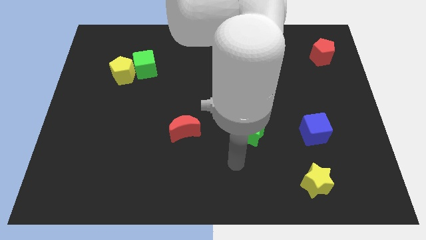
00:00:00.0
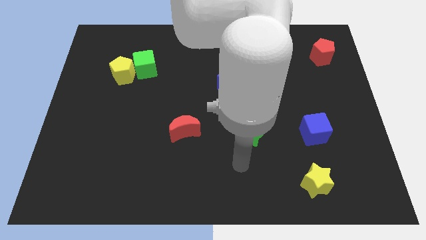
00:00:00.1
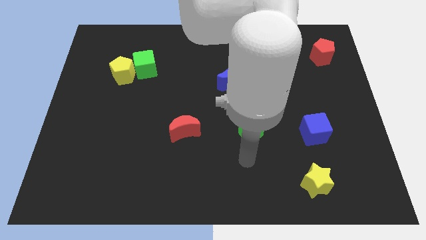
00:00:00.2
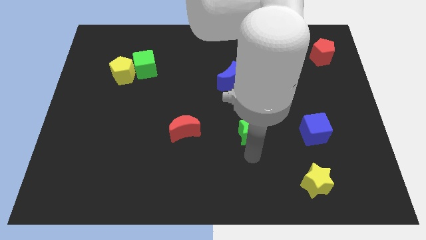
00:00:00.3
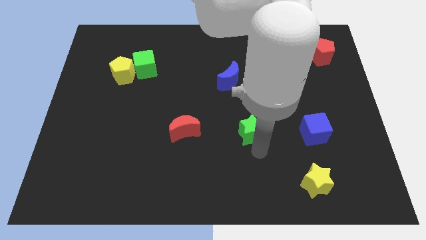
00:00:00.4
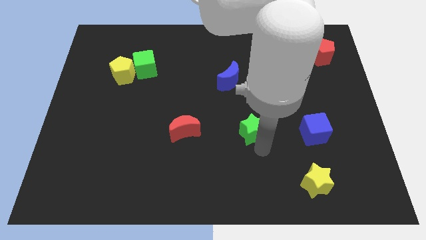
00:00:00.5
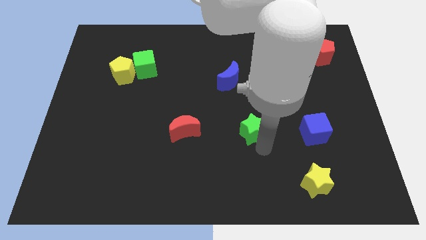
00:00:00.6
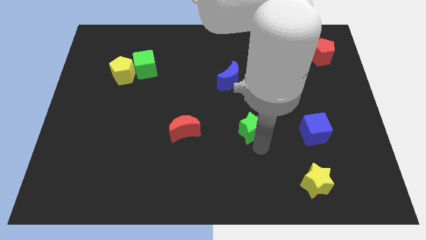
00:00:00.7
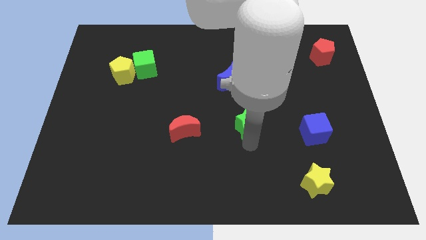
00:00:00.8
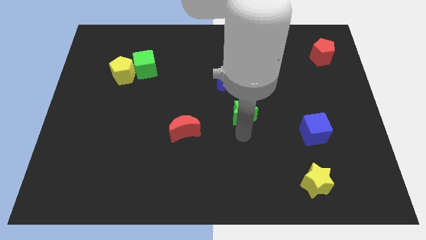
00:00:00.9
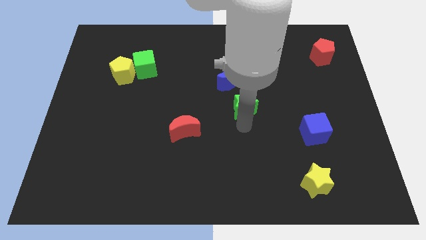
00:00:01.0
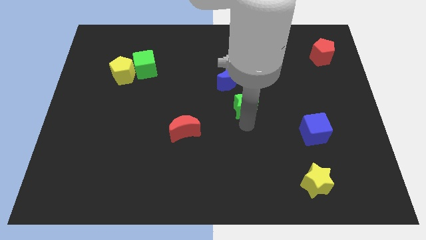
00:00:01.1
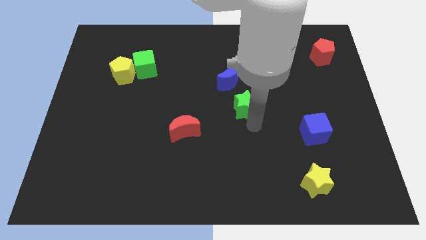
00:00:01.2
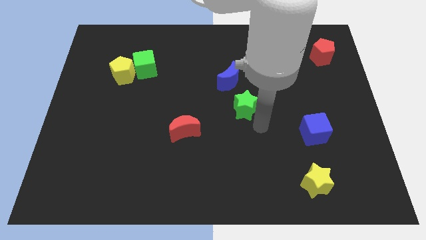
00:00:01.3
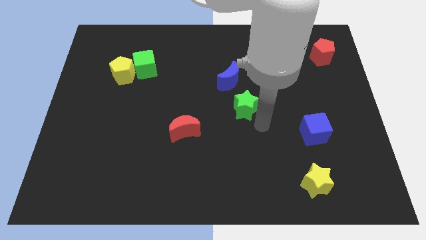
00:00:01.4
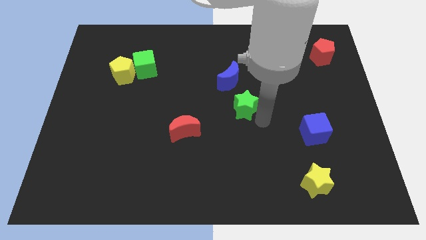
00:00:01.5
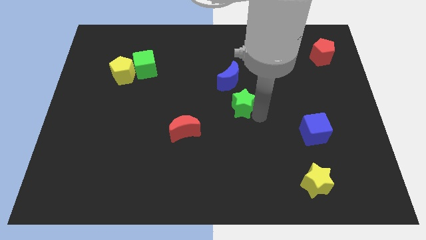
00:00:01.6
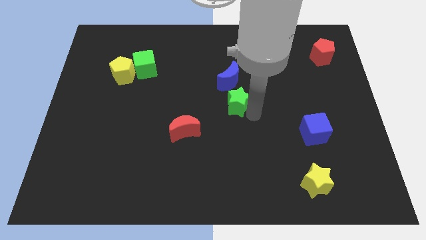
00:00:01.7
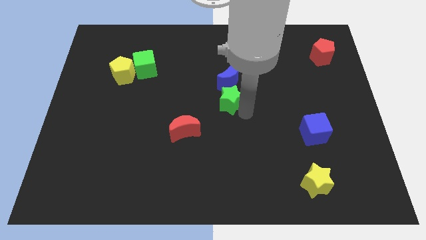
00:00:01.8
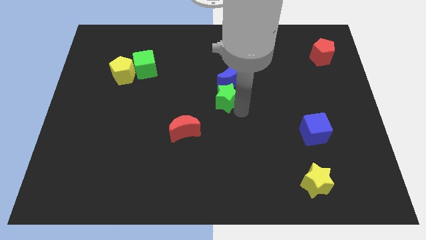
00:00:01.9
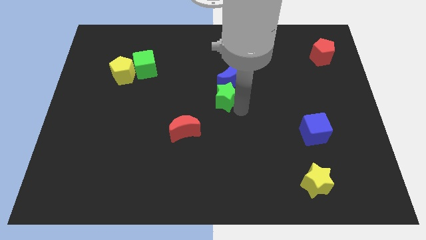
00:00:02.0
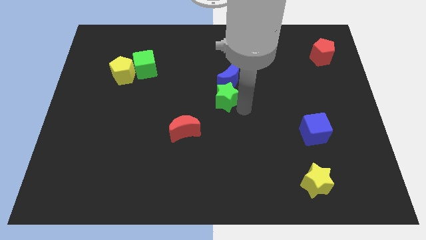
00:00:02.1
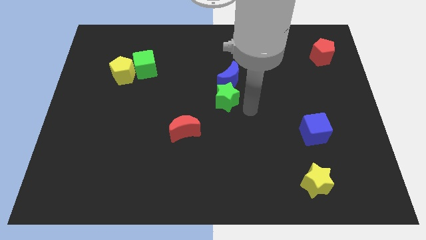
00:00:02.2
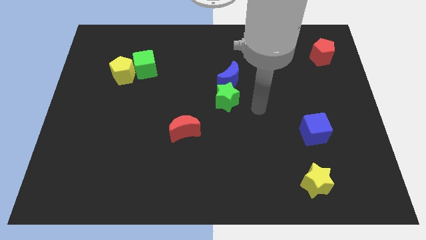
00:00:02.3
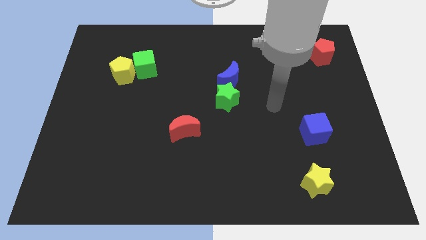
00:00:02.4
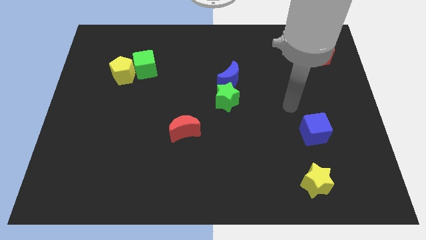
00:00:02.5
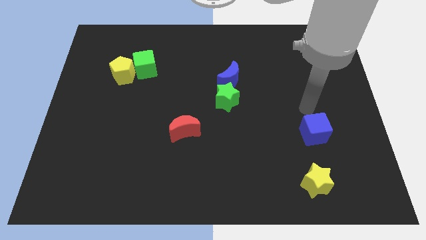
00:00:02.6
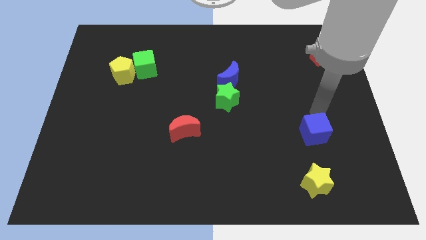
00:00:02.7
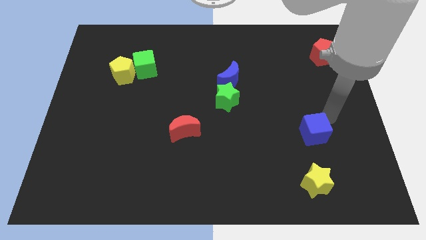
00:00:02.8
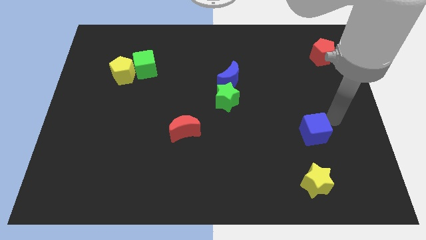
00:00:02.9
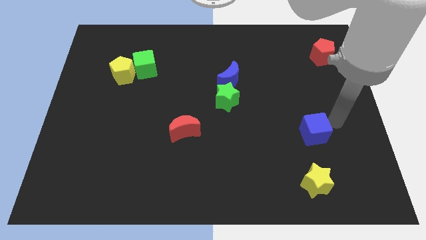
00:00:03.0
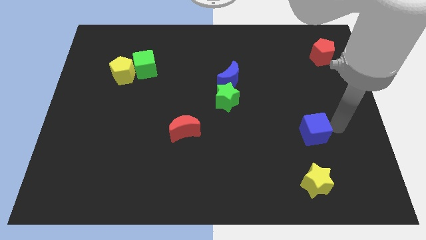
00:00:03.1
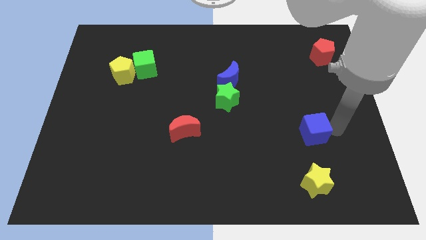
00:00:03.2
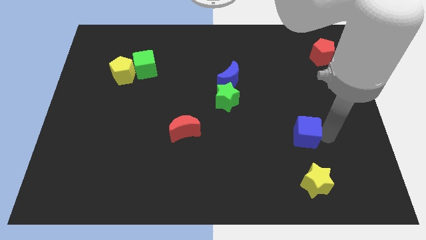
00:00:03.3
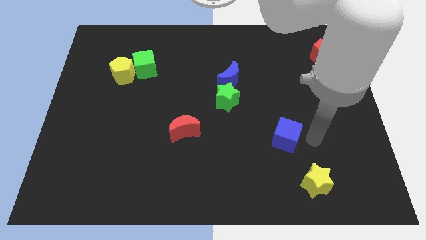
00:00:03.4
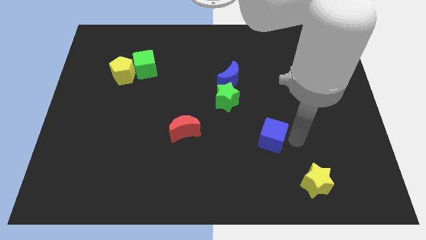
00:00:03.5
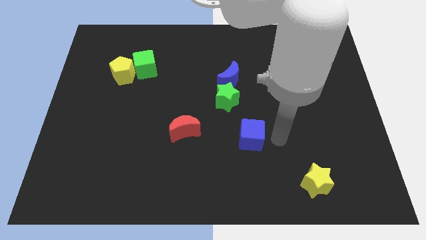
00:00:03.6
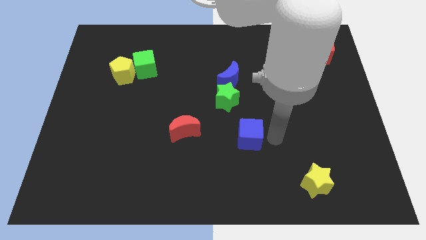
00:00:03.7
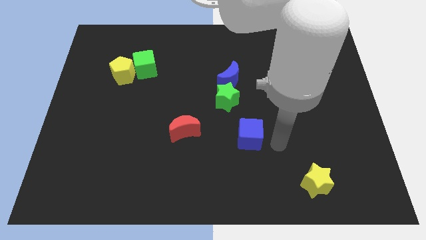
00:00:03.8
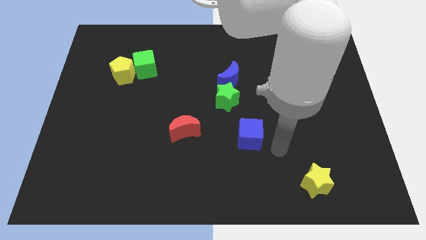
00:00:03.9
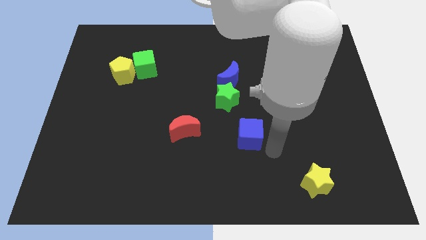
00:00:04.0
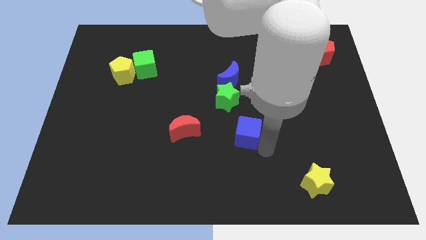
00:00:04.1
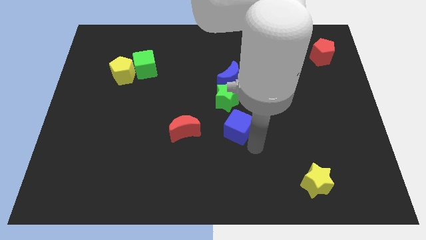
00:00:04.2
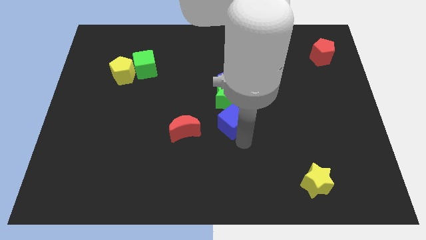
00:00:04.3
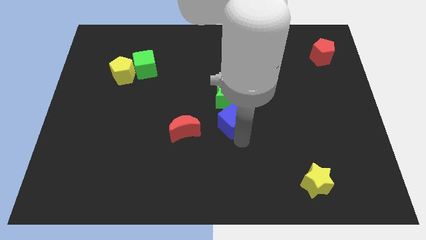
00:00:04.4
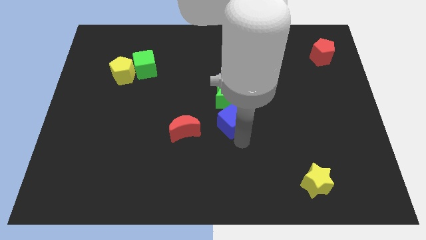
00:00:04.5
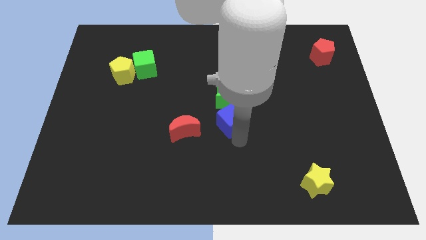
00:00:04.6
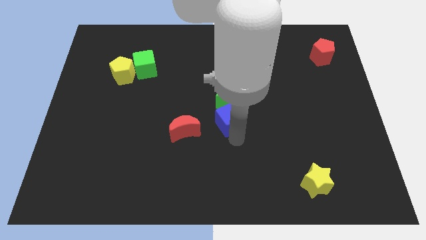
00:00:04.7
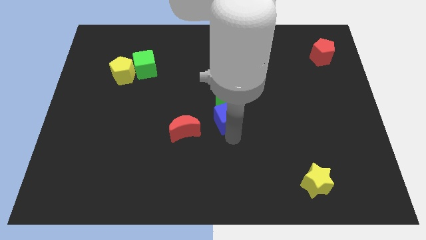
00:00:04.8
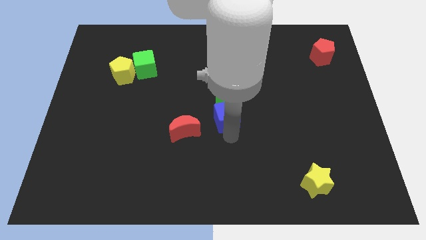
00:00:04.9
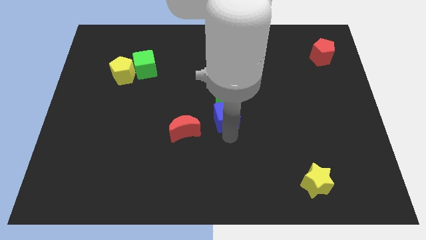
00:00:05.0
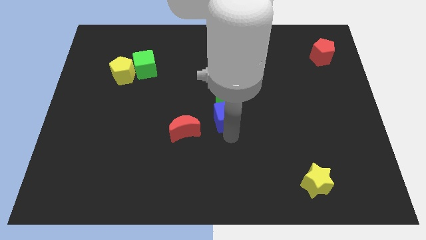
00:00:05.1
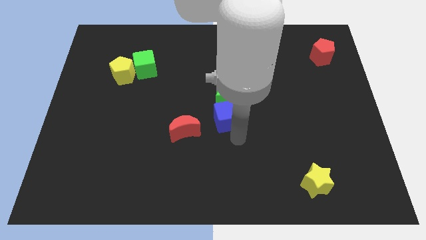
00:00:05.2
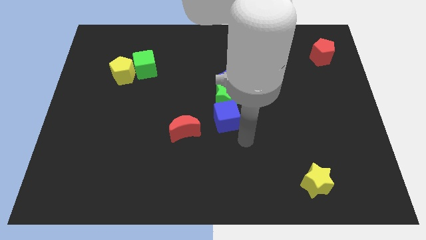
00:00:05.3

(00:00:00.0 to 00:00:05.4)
place the green star and blue cube in a vertical line to the bottom of the blue moon

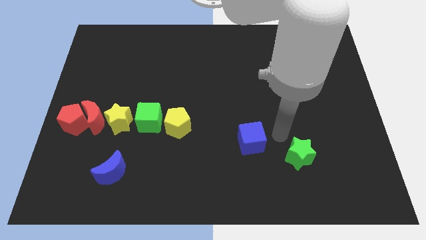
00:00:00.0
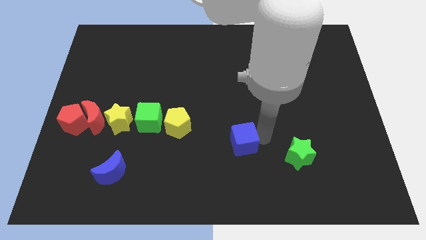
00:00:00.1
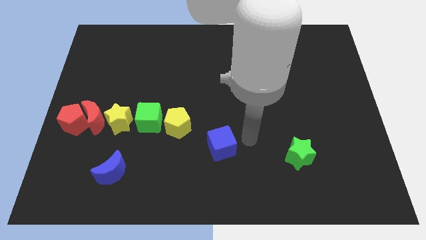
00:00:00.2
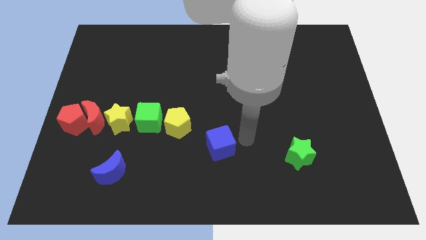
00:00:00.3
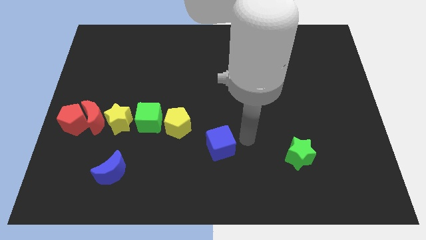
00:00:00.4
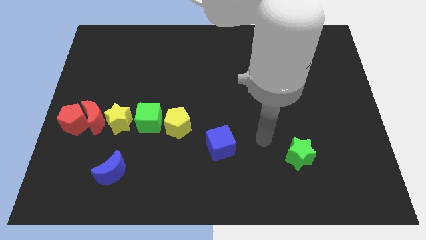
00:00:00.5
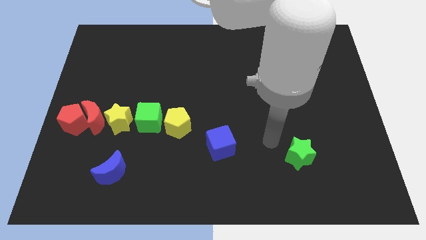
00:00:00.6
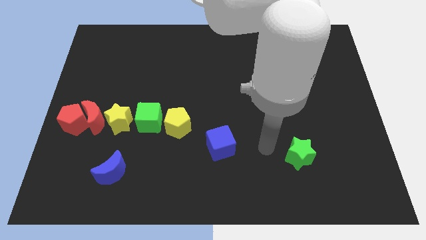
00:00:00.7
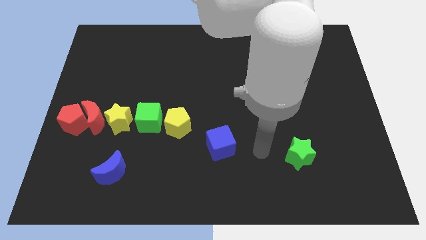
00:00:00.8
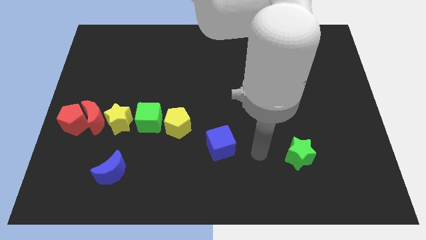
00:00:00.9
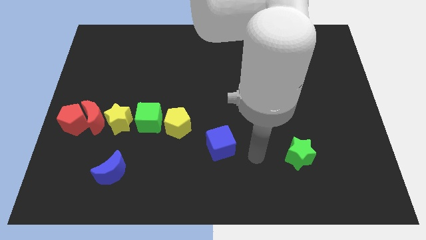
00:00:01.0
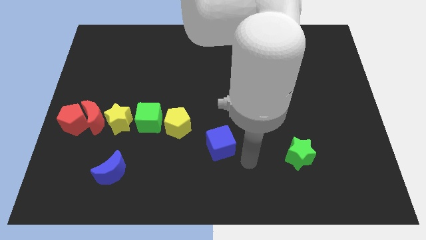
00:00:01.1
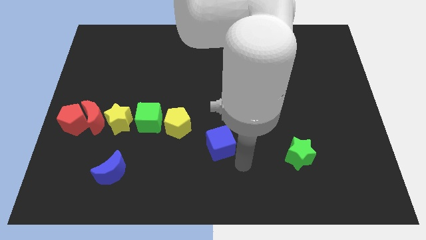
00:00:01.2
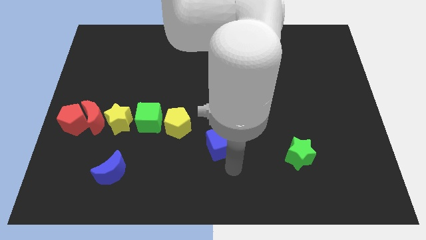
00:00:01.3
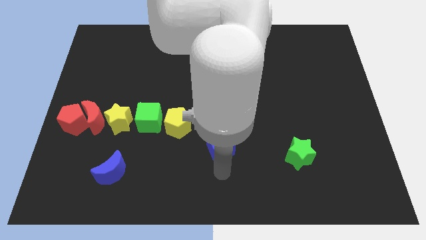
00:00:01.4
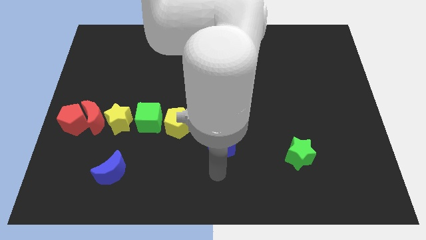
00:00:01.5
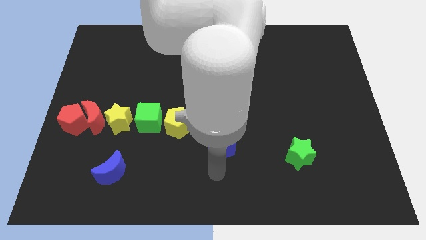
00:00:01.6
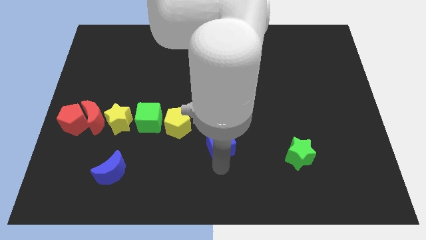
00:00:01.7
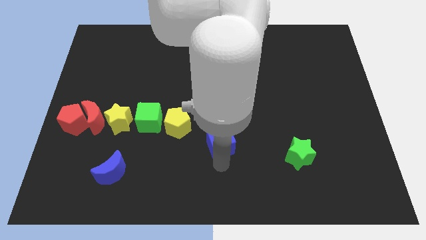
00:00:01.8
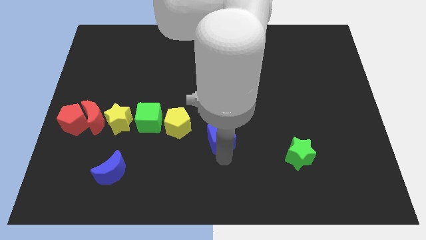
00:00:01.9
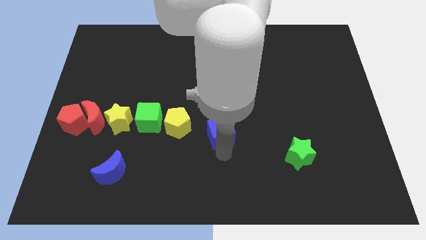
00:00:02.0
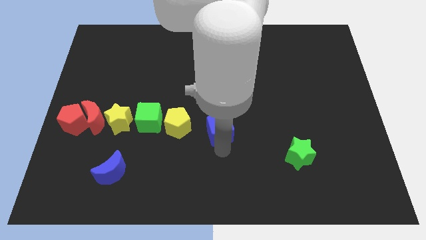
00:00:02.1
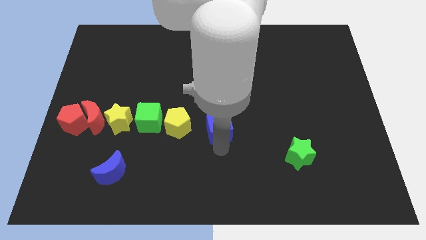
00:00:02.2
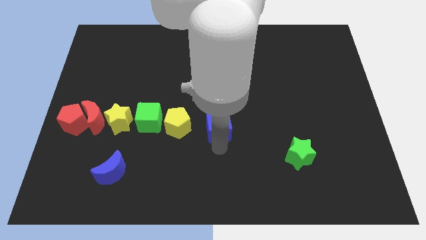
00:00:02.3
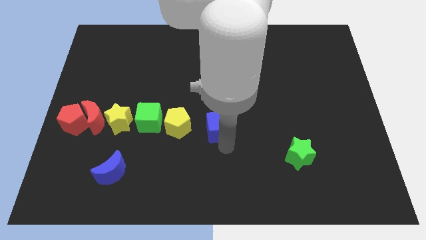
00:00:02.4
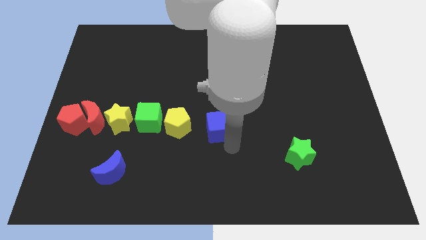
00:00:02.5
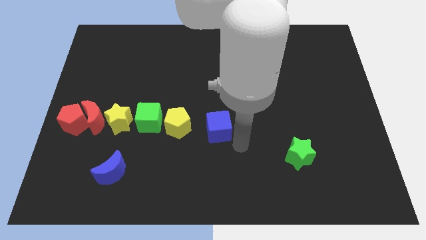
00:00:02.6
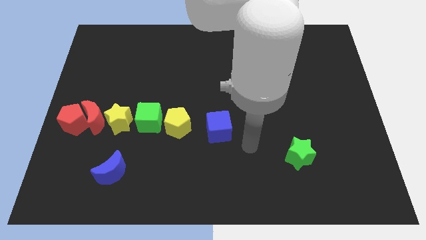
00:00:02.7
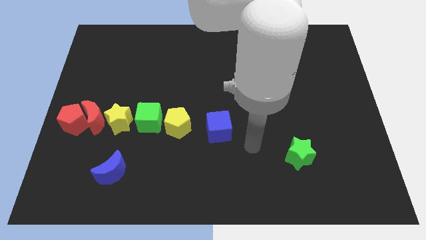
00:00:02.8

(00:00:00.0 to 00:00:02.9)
place the blue cube right to the yellow pentagon

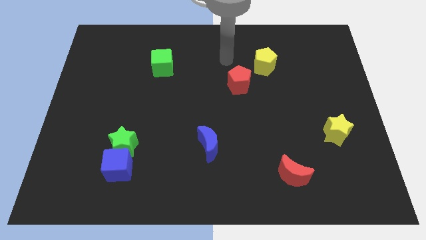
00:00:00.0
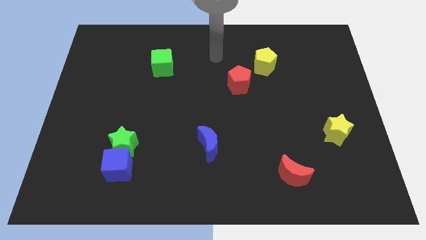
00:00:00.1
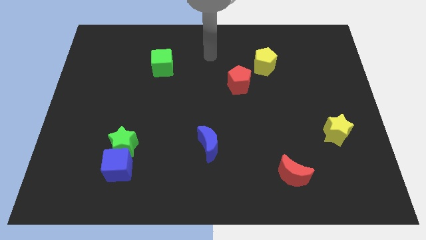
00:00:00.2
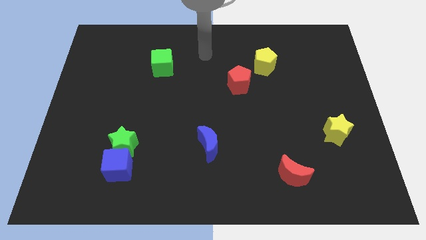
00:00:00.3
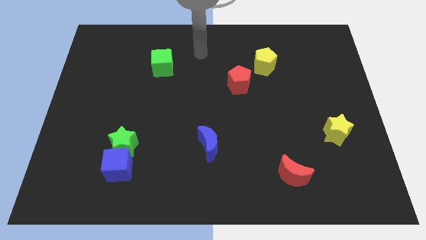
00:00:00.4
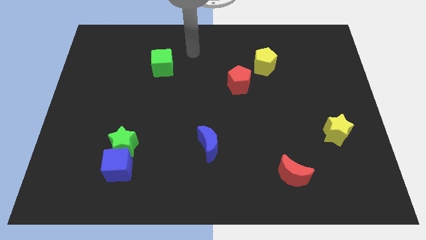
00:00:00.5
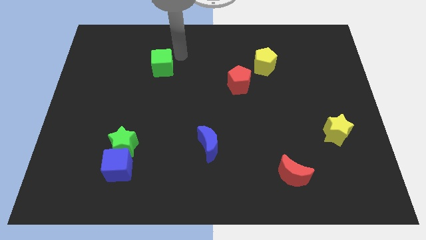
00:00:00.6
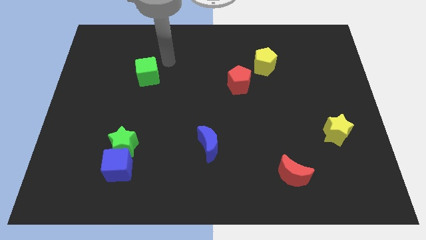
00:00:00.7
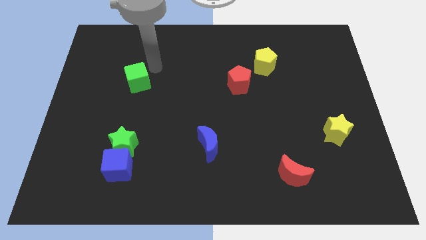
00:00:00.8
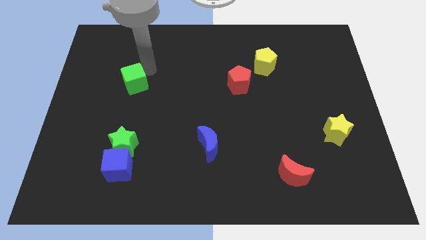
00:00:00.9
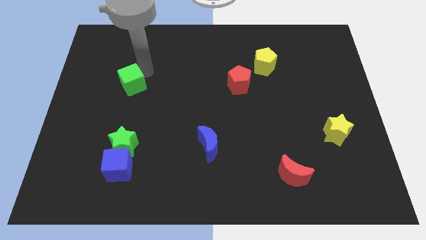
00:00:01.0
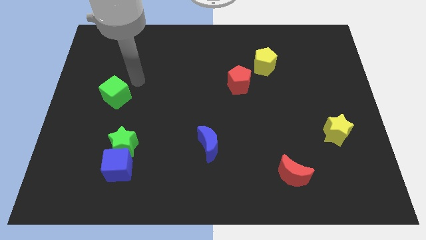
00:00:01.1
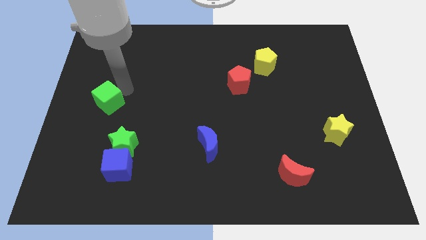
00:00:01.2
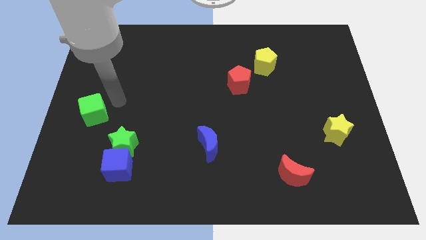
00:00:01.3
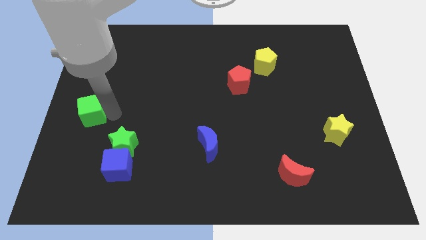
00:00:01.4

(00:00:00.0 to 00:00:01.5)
push the green cube slightly towards the left bottom diagonally
